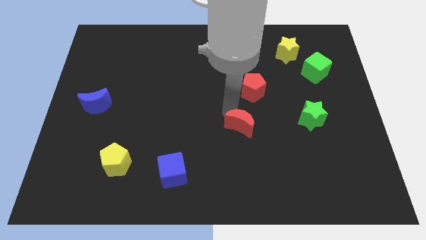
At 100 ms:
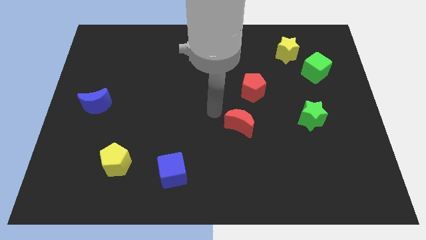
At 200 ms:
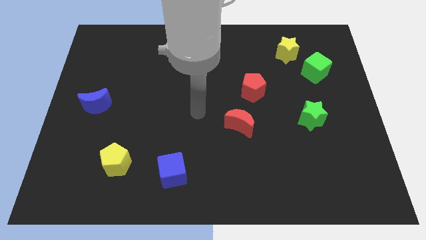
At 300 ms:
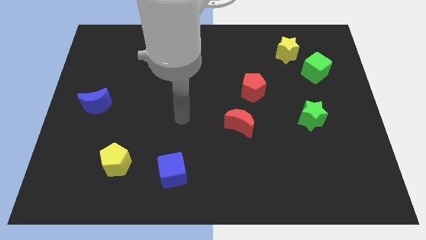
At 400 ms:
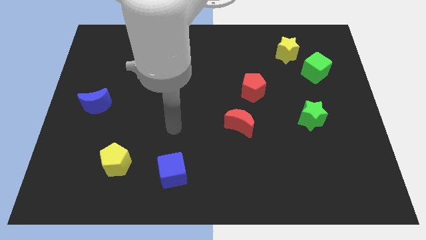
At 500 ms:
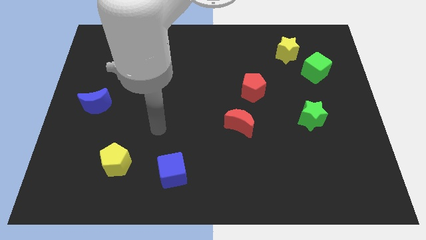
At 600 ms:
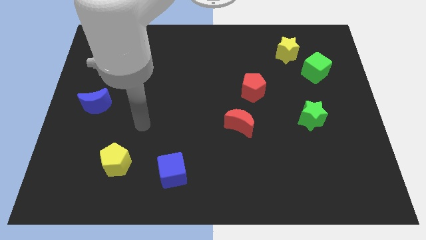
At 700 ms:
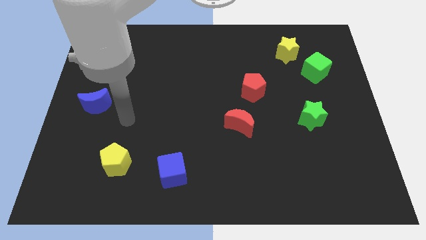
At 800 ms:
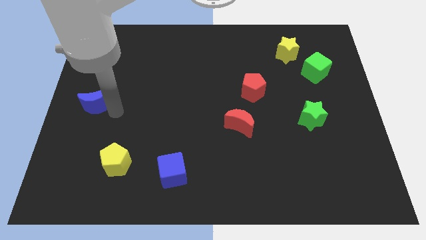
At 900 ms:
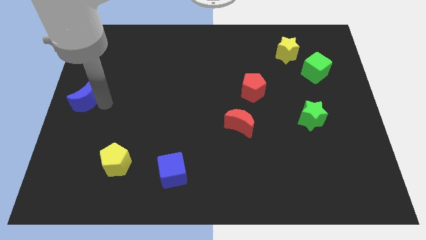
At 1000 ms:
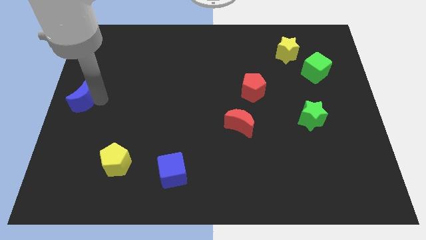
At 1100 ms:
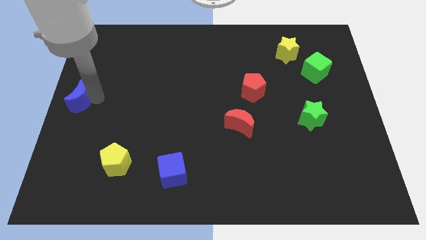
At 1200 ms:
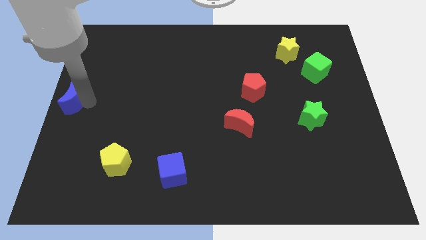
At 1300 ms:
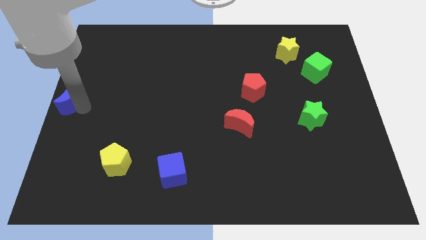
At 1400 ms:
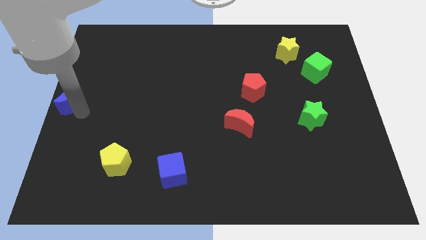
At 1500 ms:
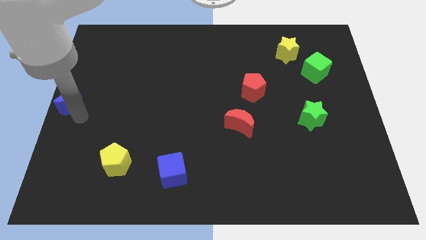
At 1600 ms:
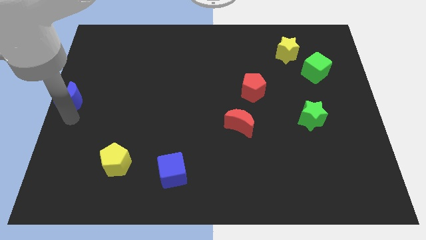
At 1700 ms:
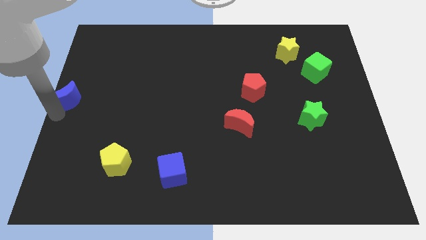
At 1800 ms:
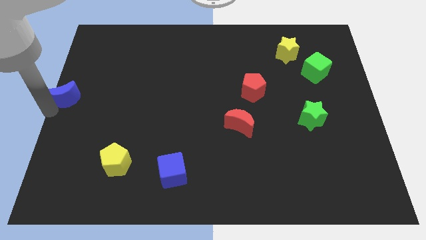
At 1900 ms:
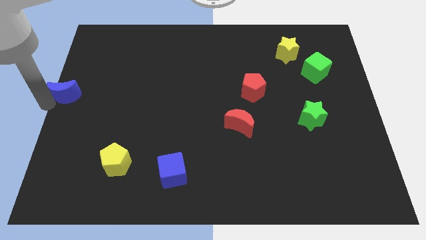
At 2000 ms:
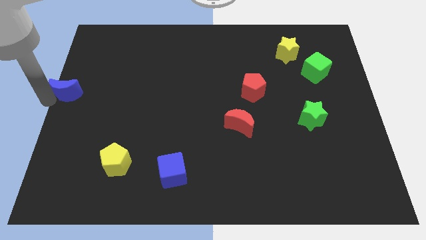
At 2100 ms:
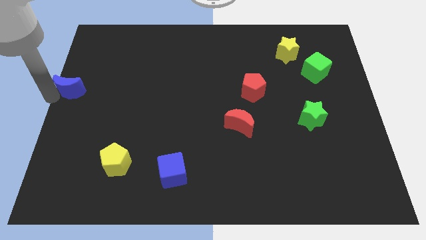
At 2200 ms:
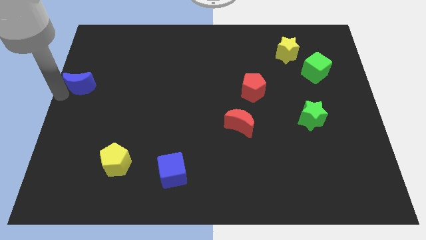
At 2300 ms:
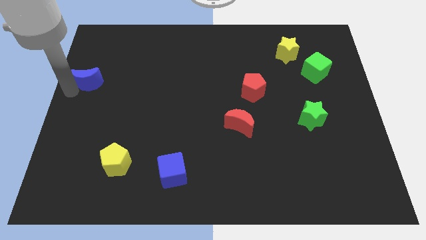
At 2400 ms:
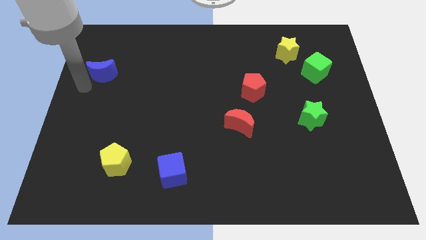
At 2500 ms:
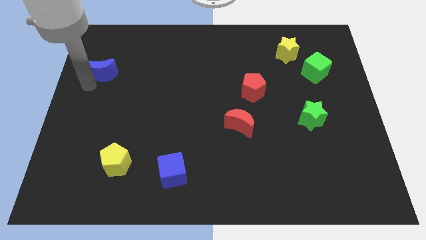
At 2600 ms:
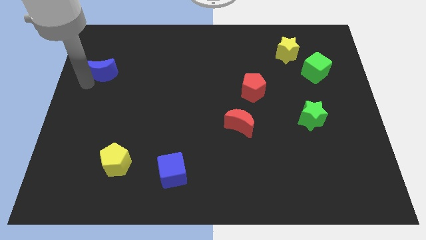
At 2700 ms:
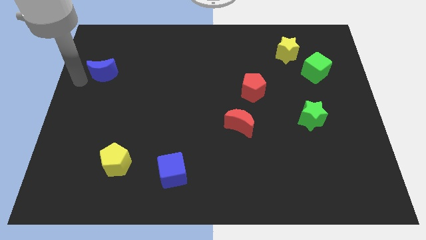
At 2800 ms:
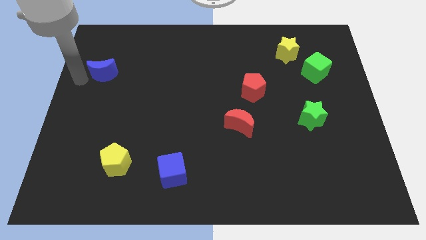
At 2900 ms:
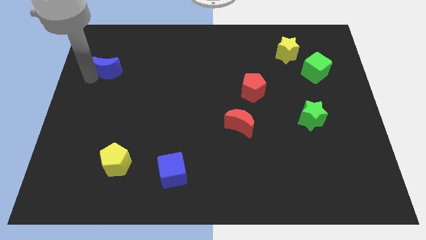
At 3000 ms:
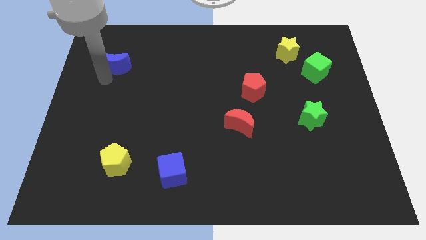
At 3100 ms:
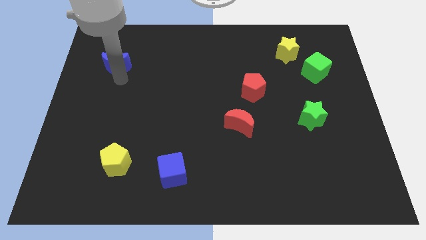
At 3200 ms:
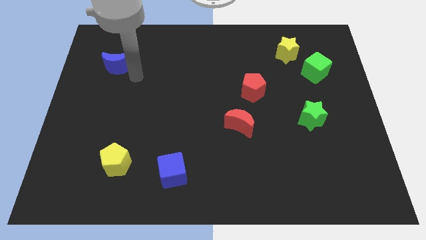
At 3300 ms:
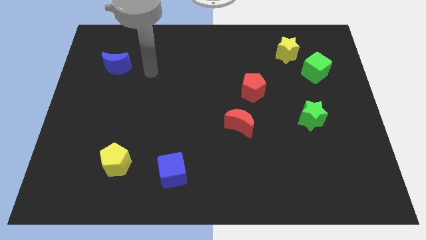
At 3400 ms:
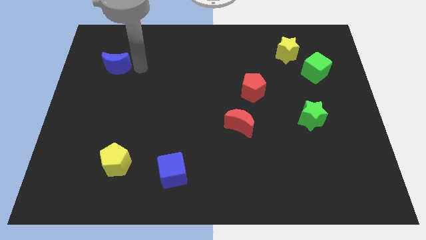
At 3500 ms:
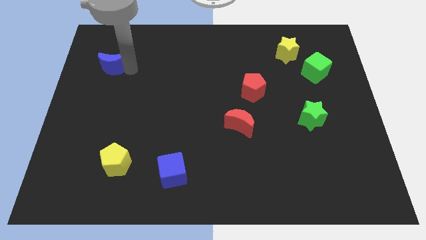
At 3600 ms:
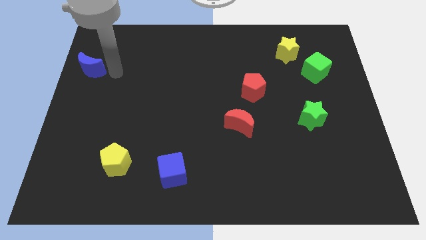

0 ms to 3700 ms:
push the blue moon towards top left

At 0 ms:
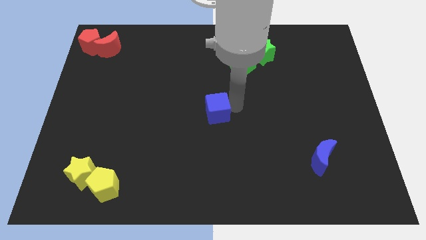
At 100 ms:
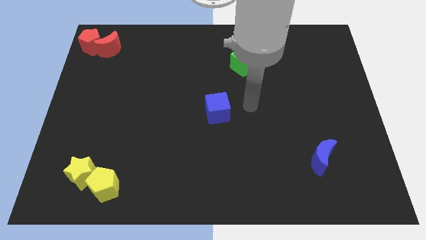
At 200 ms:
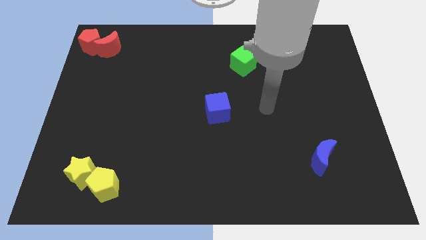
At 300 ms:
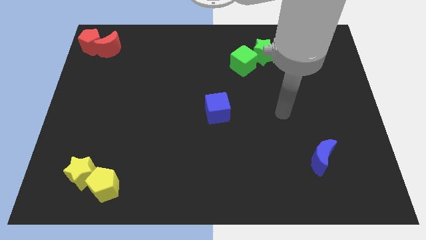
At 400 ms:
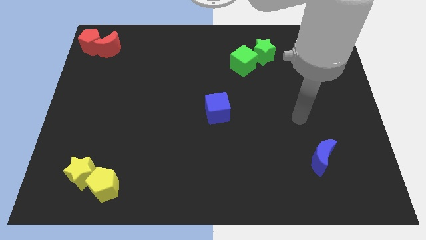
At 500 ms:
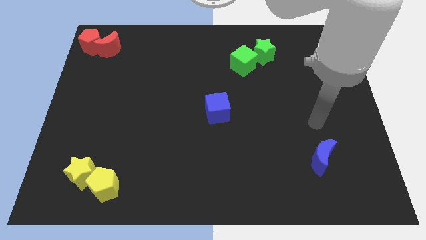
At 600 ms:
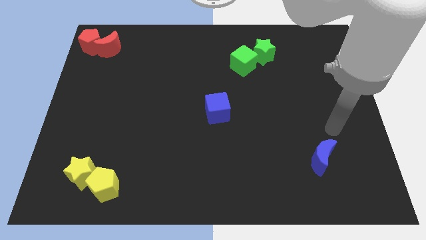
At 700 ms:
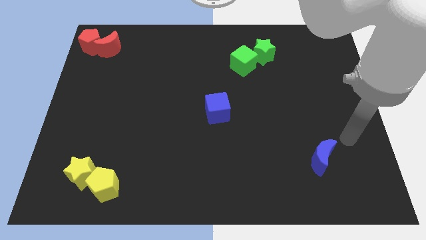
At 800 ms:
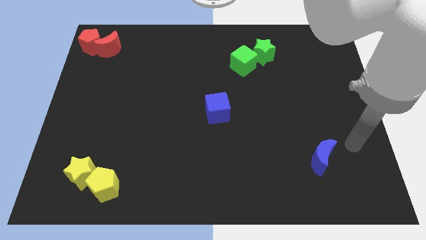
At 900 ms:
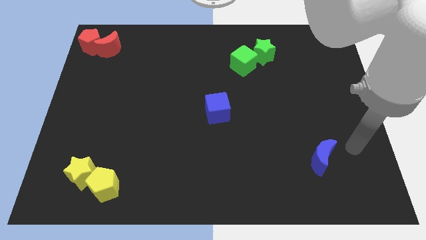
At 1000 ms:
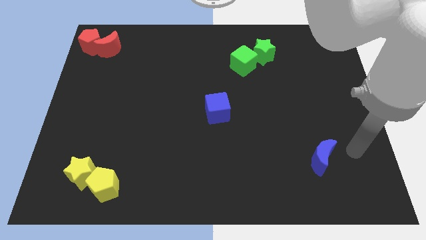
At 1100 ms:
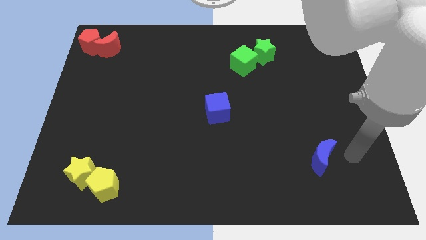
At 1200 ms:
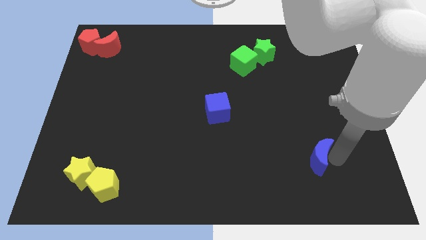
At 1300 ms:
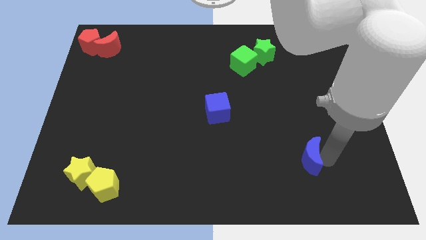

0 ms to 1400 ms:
move your arm right to the blue crescent

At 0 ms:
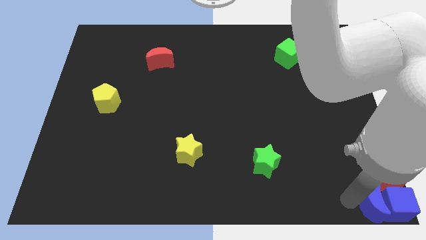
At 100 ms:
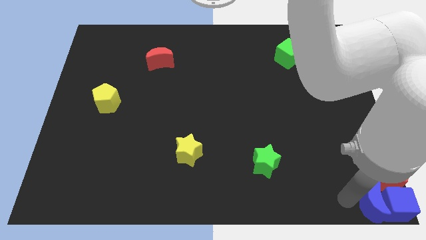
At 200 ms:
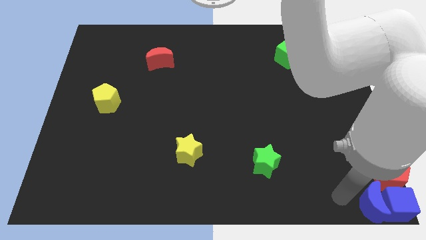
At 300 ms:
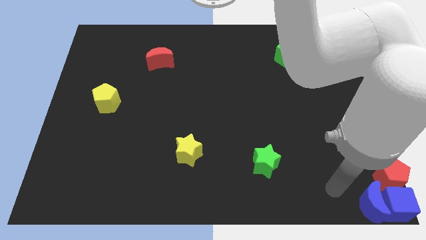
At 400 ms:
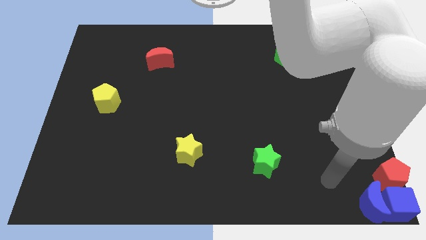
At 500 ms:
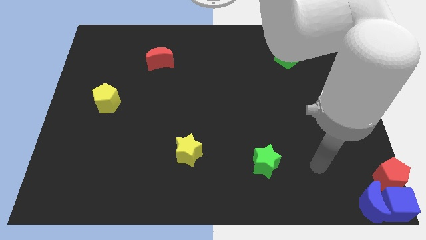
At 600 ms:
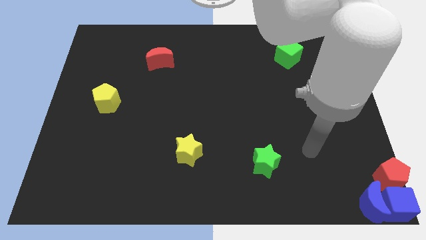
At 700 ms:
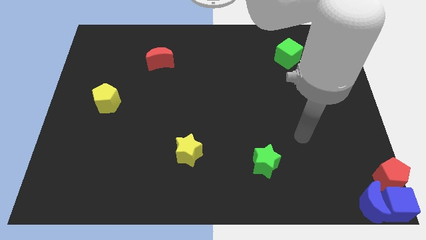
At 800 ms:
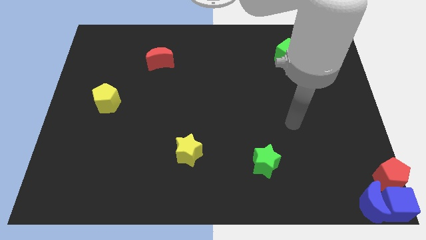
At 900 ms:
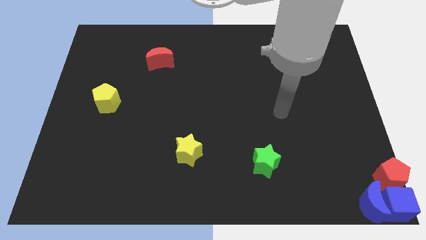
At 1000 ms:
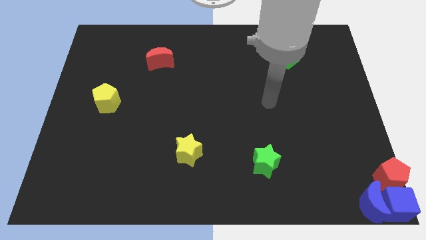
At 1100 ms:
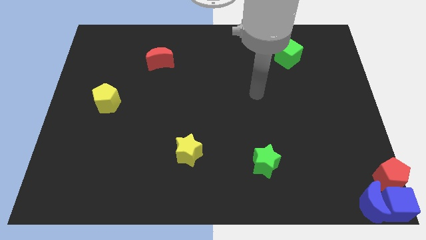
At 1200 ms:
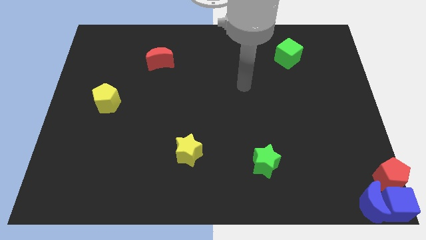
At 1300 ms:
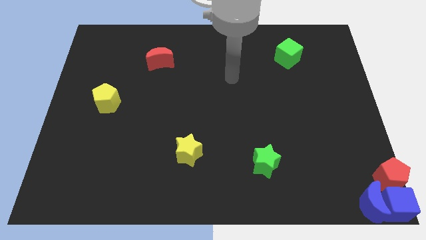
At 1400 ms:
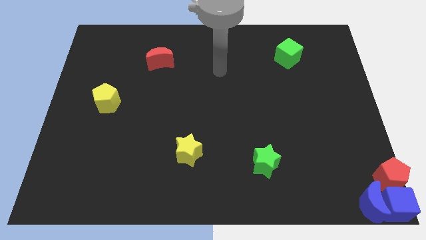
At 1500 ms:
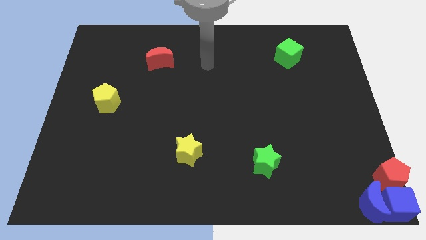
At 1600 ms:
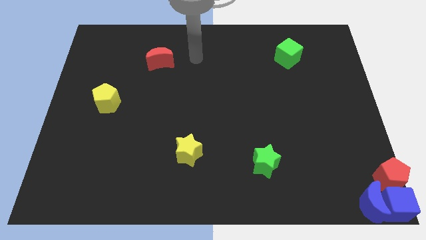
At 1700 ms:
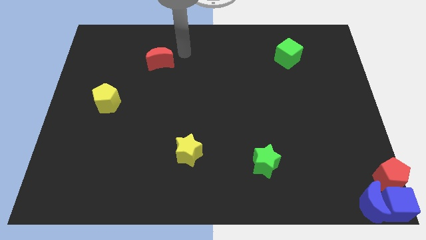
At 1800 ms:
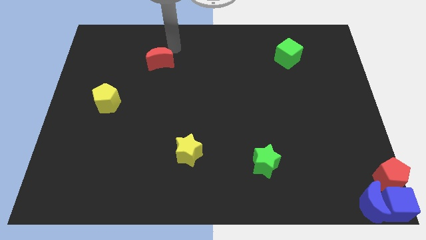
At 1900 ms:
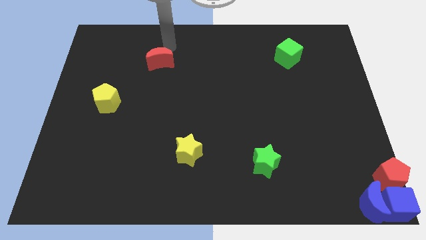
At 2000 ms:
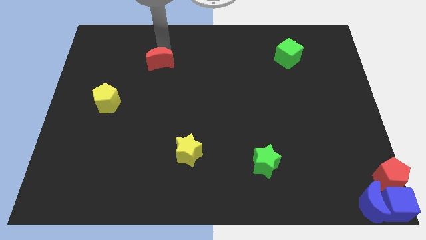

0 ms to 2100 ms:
place your hand above the red crescent

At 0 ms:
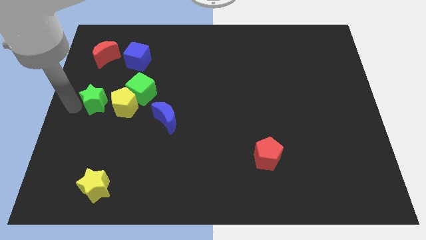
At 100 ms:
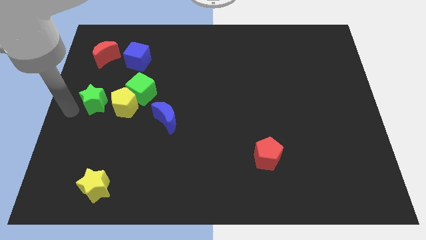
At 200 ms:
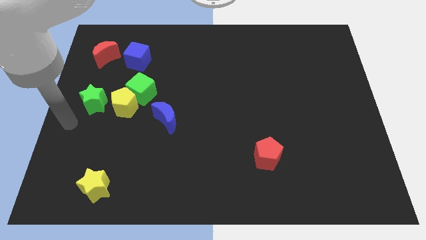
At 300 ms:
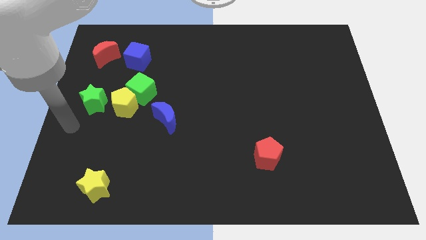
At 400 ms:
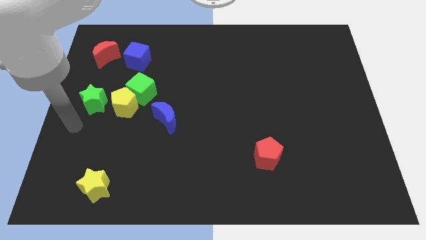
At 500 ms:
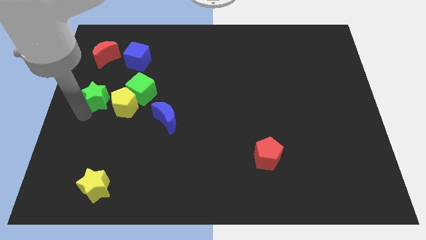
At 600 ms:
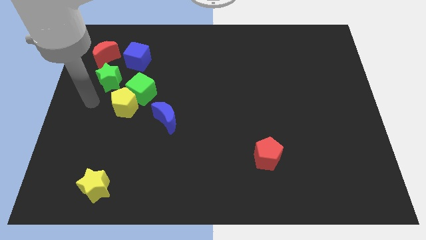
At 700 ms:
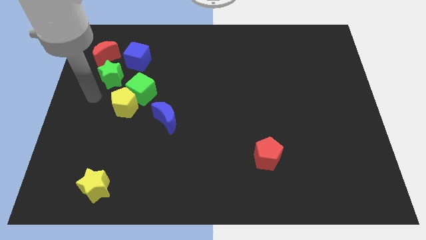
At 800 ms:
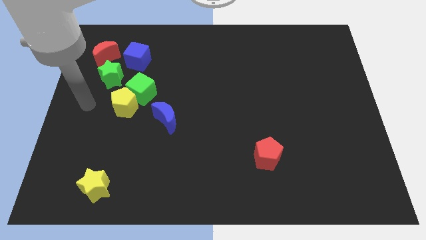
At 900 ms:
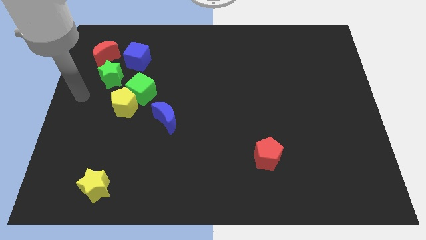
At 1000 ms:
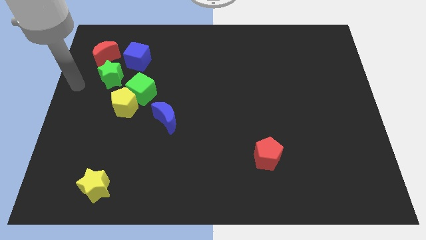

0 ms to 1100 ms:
push green star to the bottom of the red crescent

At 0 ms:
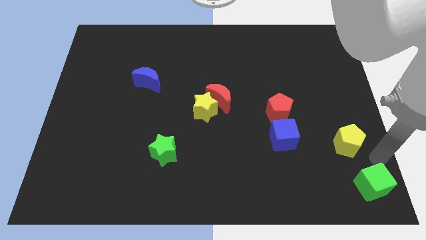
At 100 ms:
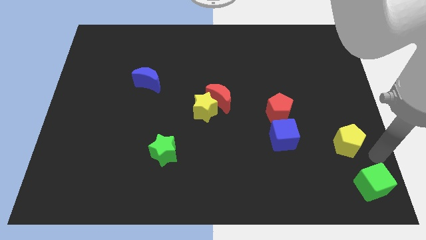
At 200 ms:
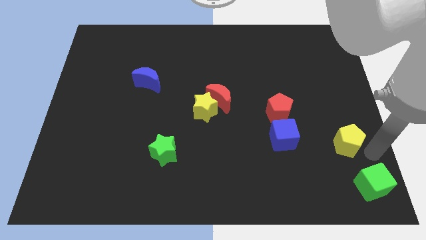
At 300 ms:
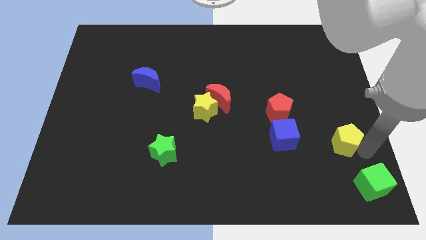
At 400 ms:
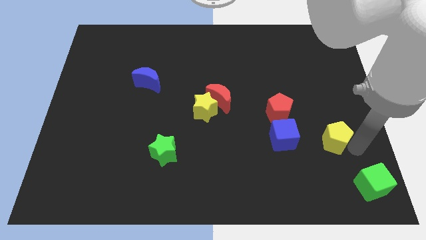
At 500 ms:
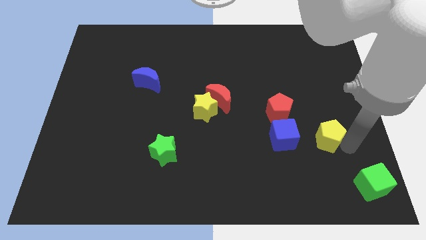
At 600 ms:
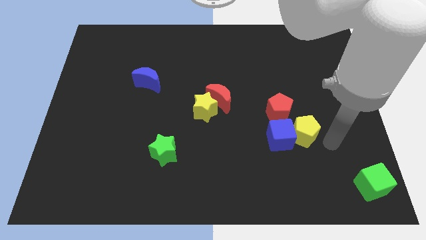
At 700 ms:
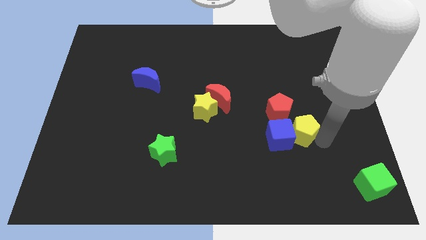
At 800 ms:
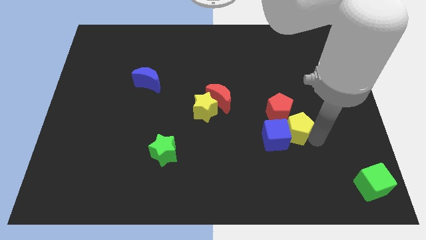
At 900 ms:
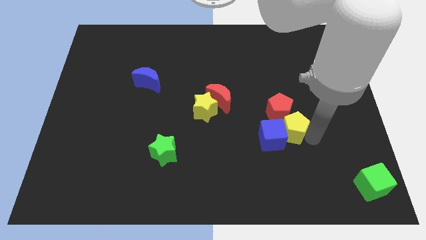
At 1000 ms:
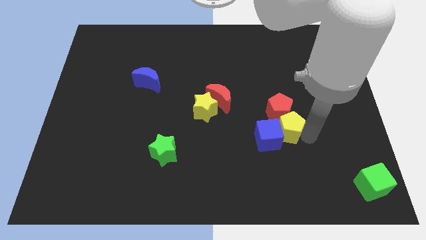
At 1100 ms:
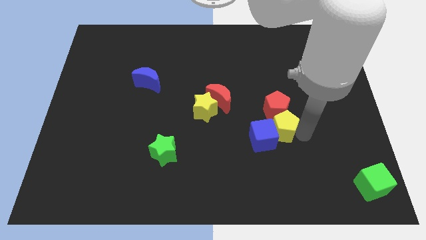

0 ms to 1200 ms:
push the blue cube and yellow pentagon towards the left side of the board
